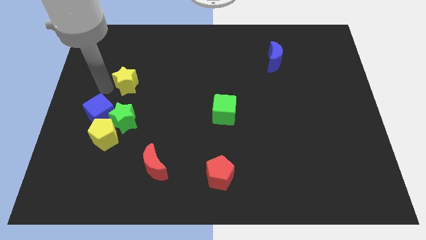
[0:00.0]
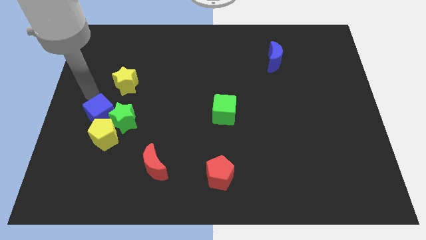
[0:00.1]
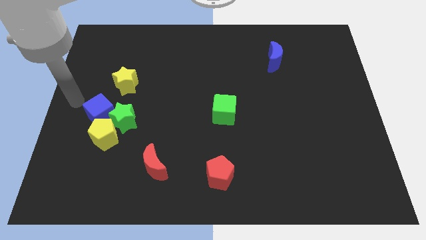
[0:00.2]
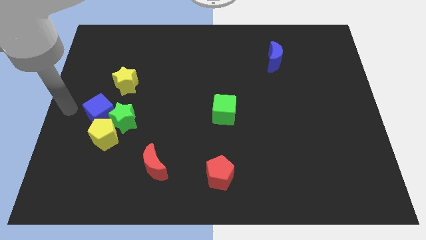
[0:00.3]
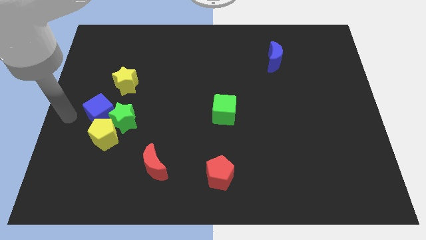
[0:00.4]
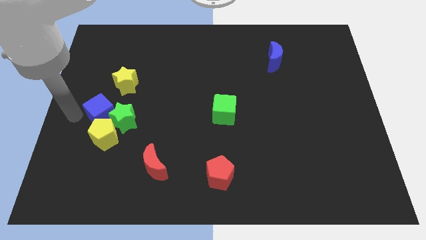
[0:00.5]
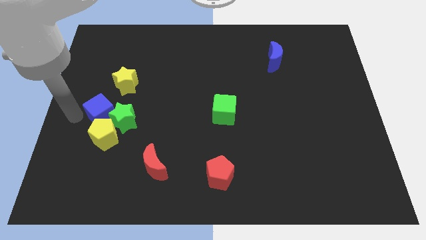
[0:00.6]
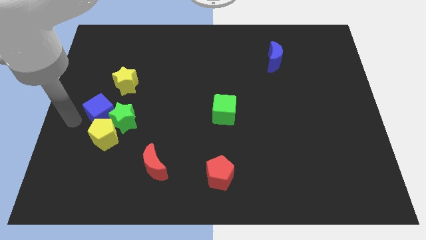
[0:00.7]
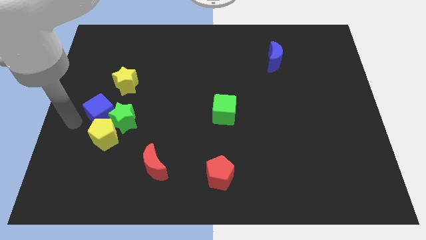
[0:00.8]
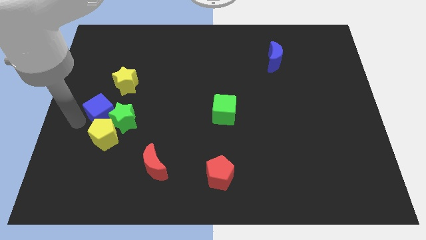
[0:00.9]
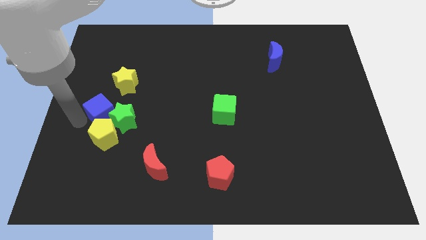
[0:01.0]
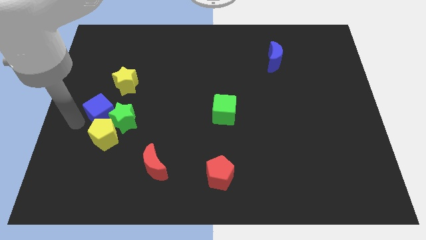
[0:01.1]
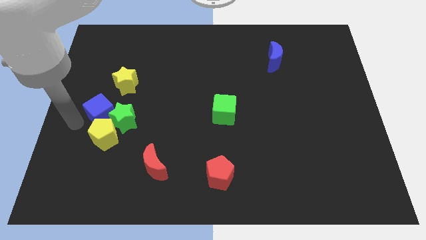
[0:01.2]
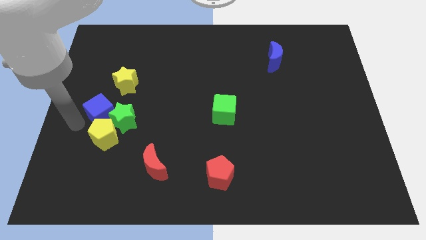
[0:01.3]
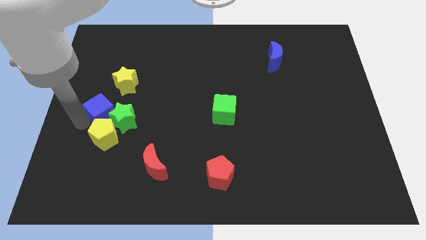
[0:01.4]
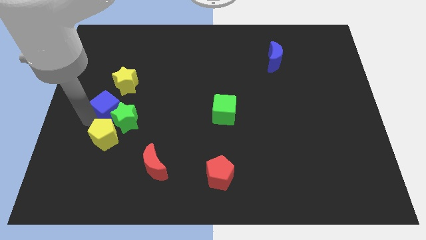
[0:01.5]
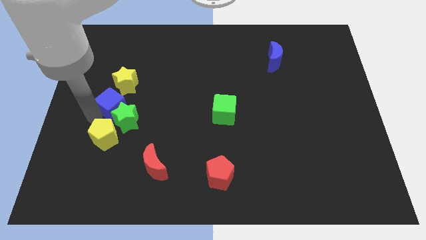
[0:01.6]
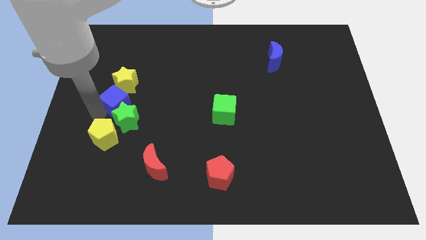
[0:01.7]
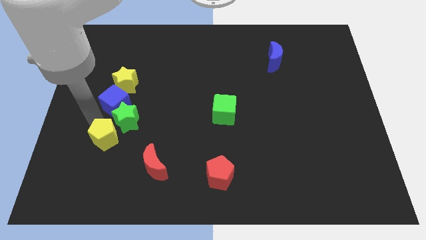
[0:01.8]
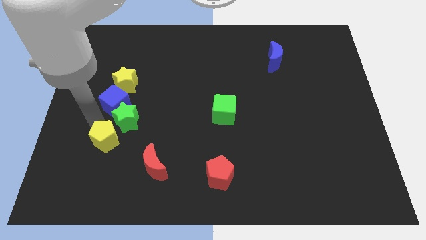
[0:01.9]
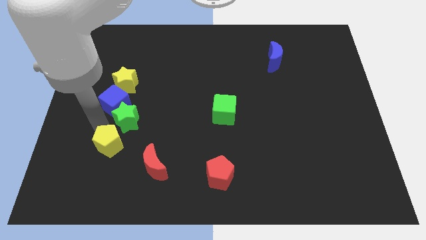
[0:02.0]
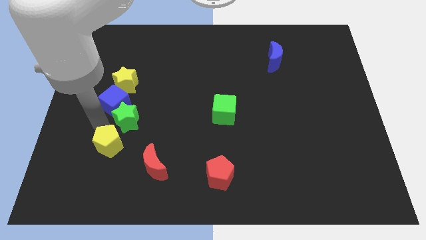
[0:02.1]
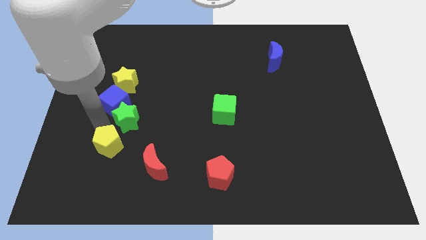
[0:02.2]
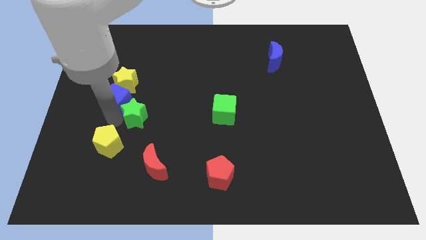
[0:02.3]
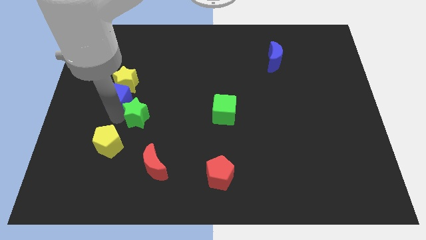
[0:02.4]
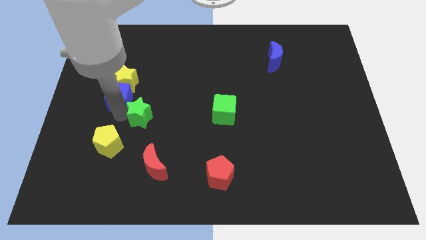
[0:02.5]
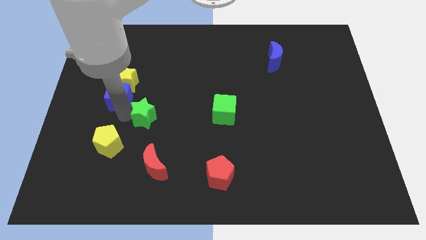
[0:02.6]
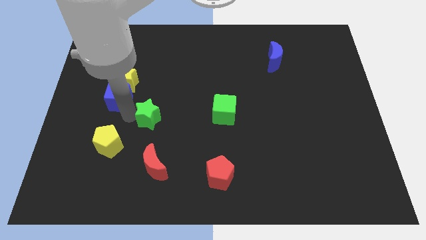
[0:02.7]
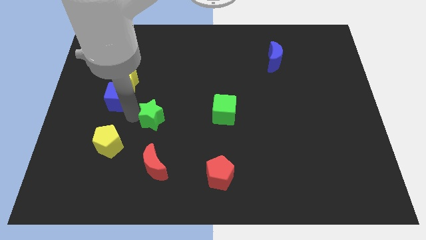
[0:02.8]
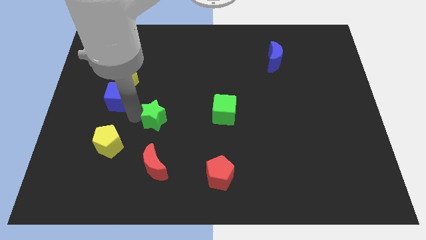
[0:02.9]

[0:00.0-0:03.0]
place blue cube below yellow star

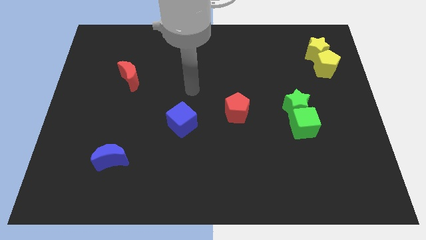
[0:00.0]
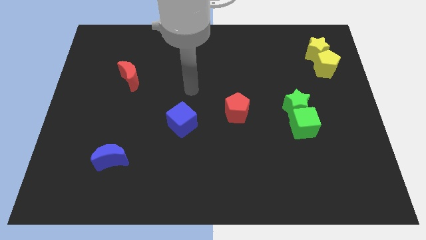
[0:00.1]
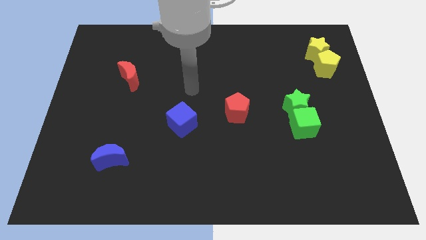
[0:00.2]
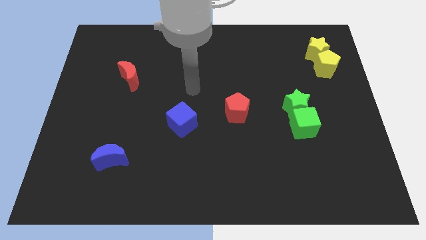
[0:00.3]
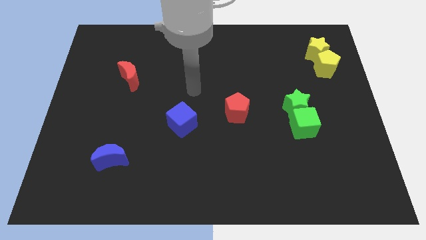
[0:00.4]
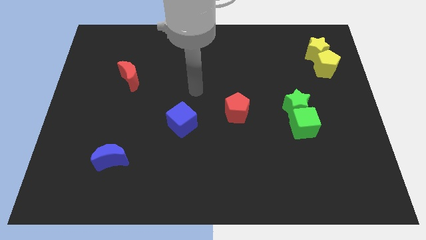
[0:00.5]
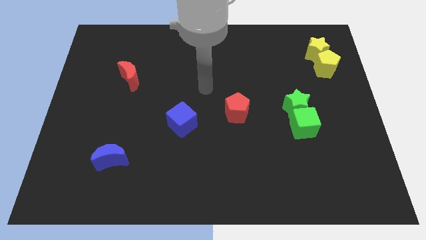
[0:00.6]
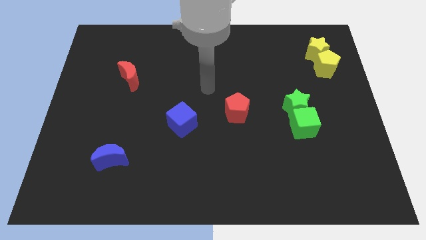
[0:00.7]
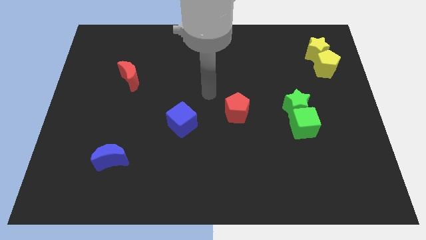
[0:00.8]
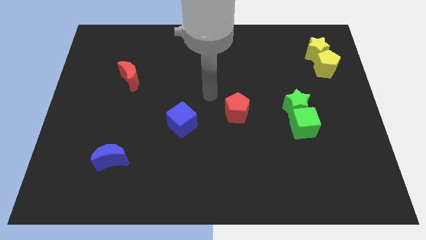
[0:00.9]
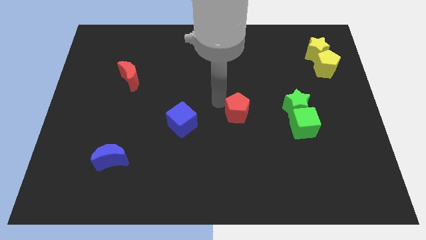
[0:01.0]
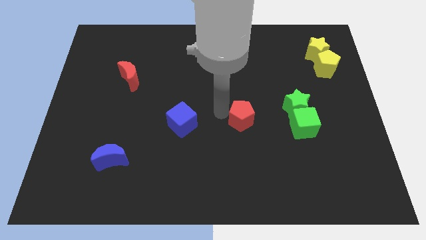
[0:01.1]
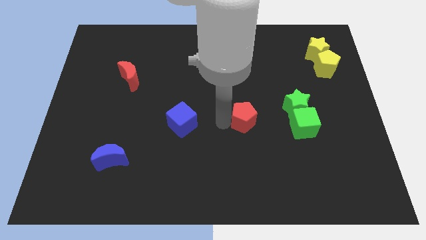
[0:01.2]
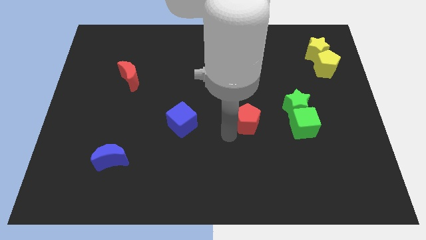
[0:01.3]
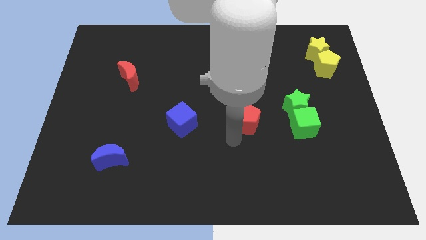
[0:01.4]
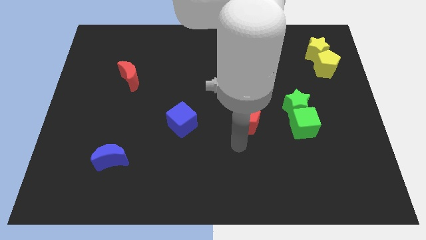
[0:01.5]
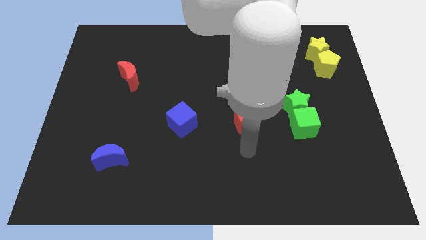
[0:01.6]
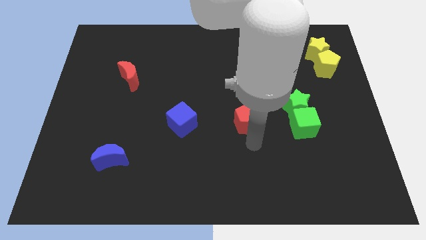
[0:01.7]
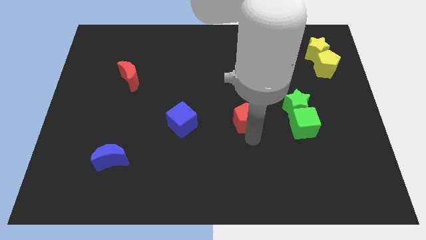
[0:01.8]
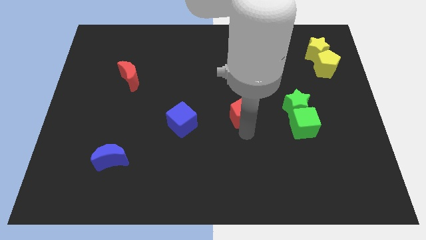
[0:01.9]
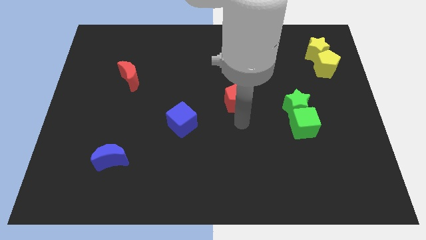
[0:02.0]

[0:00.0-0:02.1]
place the arm below the red pentagon

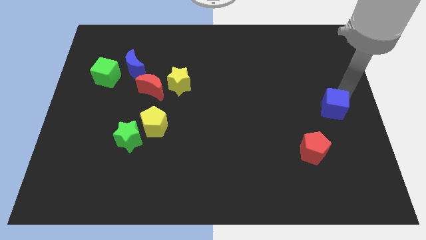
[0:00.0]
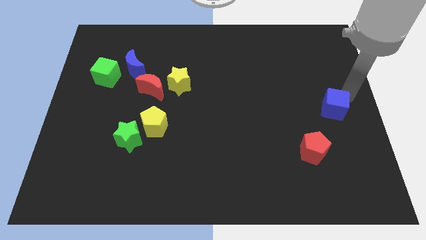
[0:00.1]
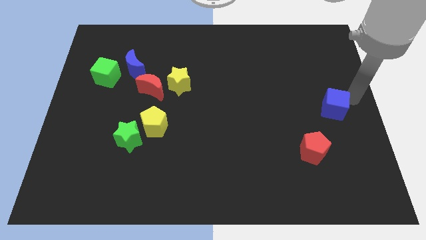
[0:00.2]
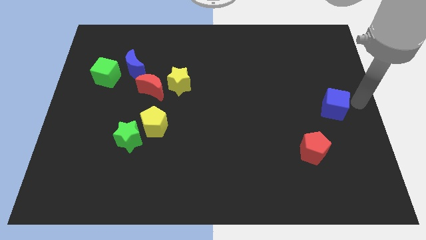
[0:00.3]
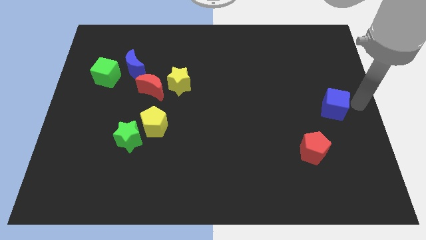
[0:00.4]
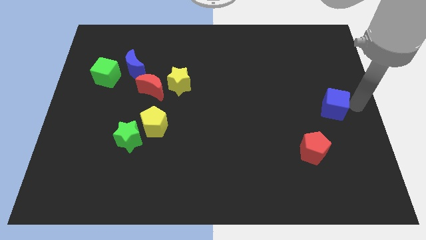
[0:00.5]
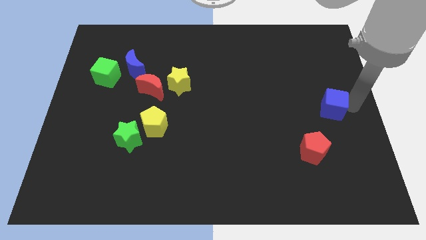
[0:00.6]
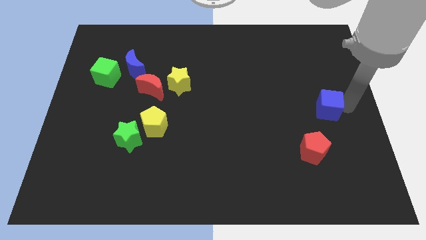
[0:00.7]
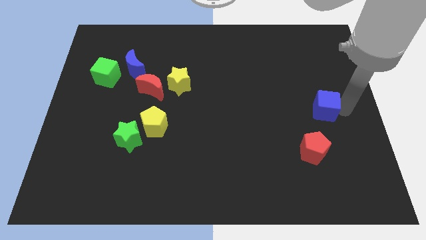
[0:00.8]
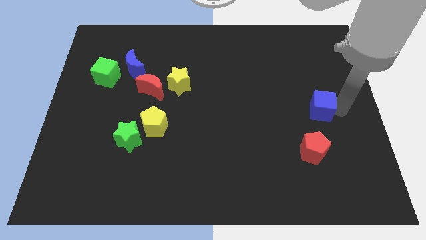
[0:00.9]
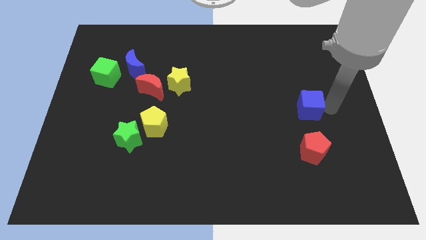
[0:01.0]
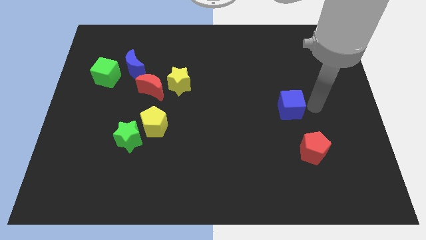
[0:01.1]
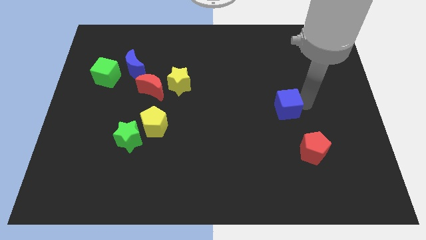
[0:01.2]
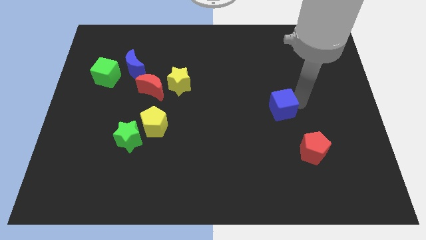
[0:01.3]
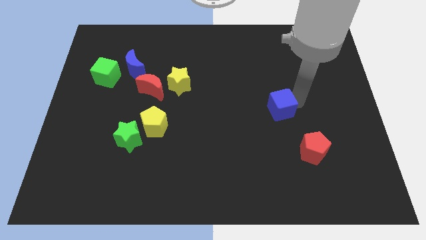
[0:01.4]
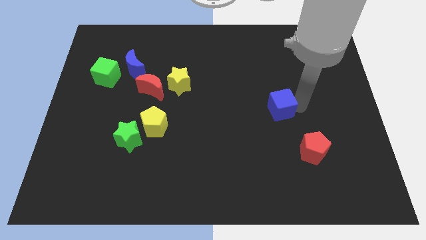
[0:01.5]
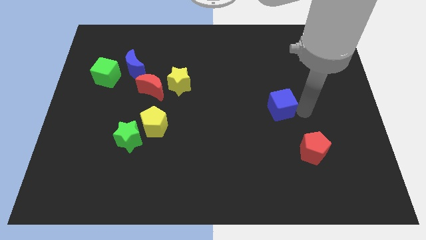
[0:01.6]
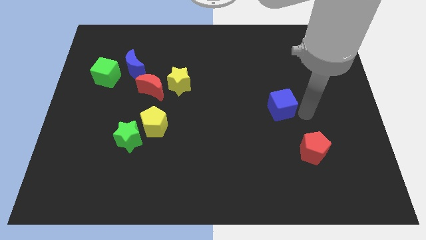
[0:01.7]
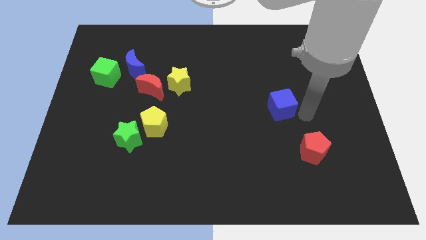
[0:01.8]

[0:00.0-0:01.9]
push the blue cube towards the center of the board

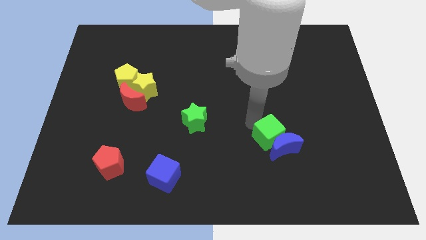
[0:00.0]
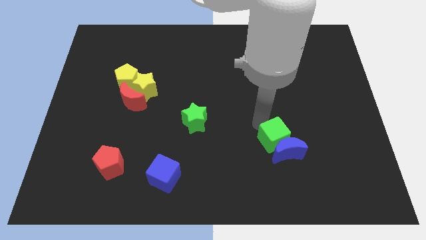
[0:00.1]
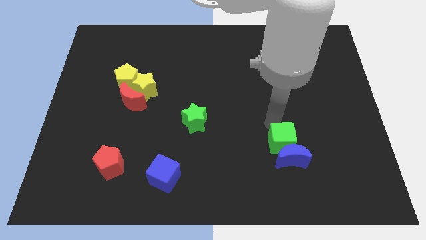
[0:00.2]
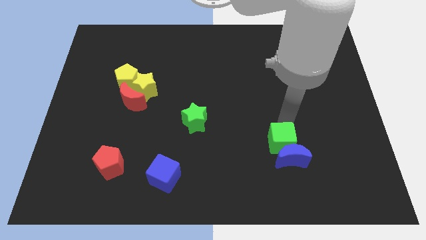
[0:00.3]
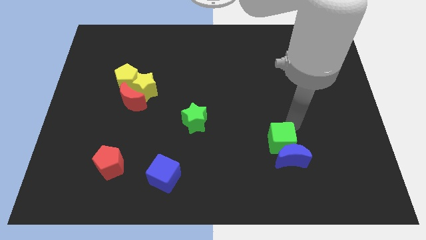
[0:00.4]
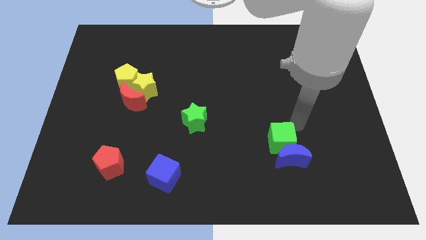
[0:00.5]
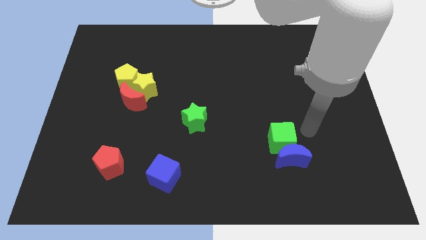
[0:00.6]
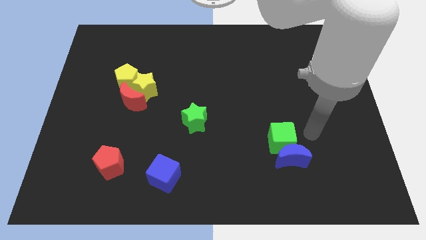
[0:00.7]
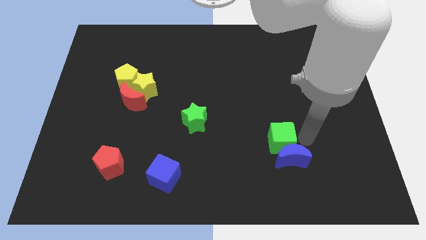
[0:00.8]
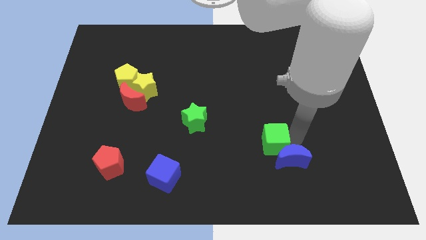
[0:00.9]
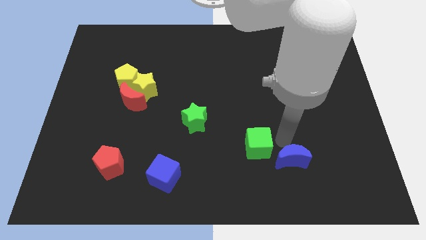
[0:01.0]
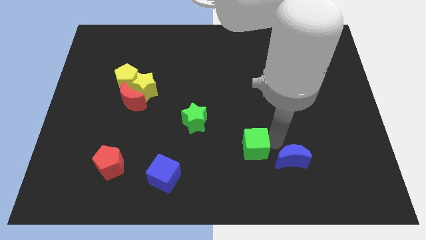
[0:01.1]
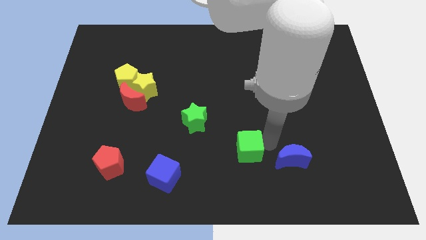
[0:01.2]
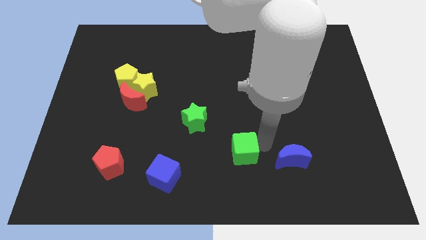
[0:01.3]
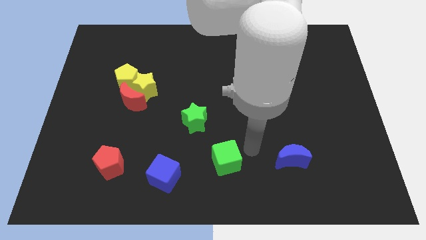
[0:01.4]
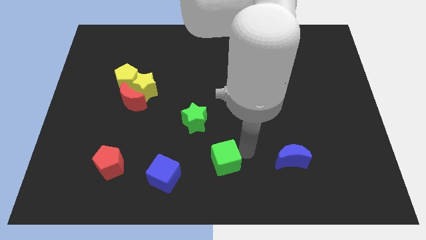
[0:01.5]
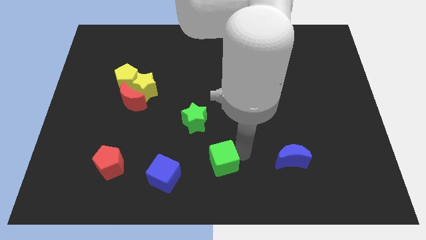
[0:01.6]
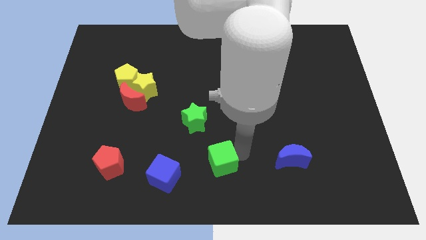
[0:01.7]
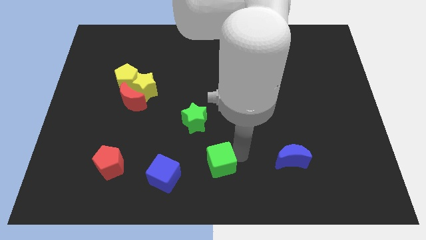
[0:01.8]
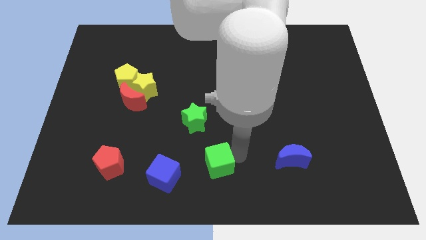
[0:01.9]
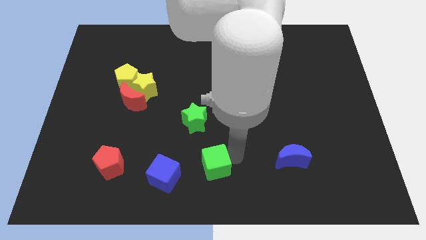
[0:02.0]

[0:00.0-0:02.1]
separate green cube from blue moon
